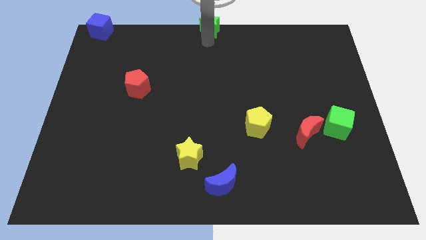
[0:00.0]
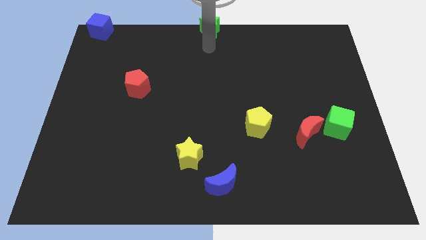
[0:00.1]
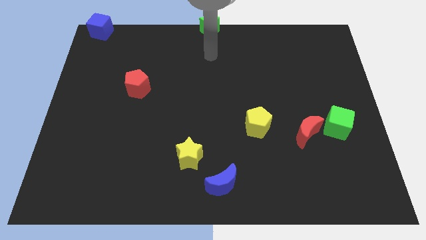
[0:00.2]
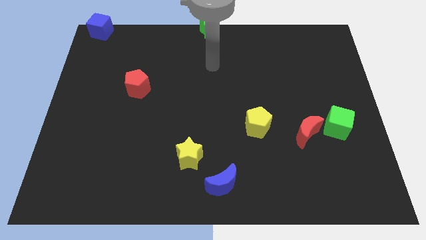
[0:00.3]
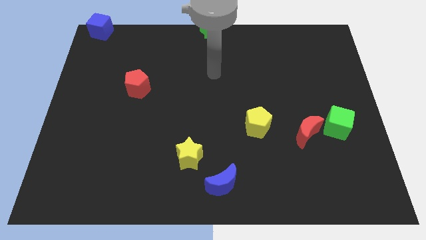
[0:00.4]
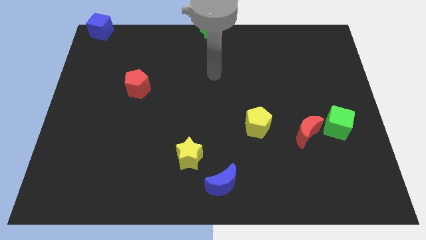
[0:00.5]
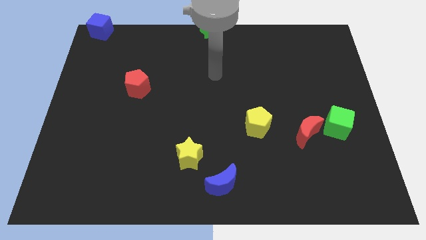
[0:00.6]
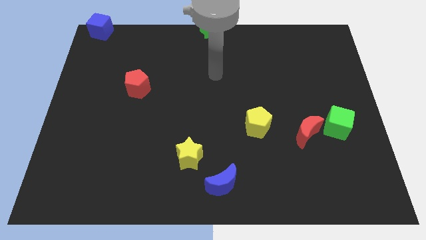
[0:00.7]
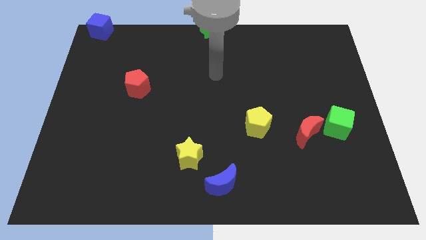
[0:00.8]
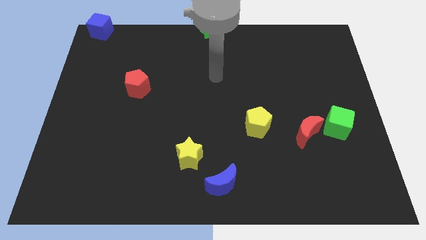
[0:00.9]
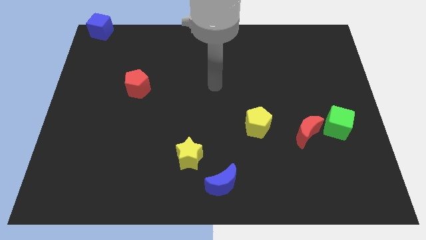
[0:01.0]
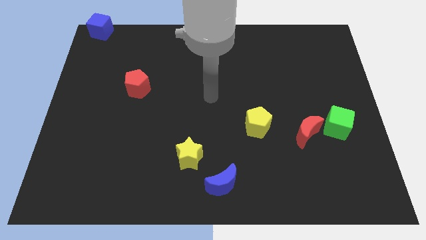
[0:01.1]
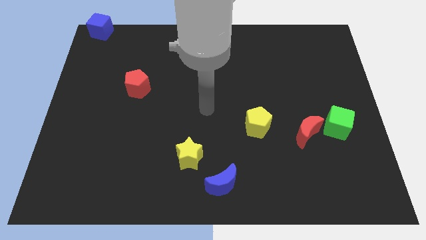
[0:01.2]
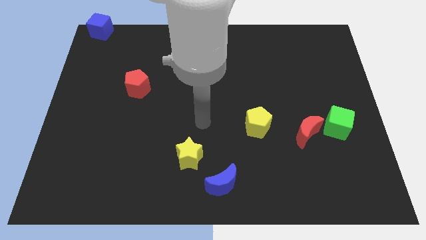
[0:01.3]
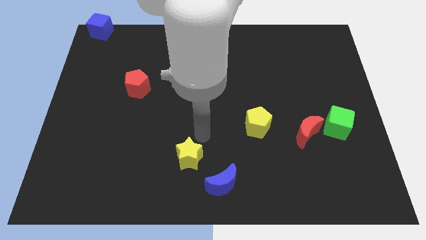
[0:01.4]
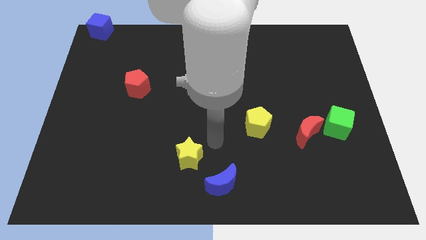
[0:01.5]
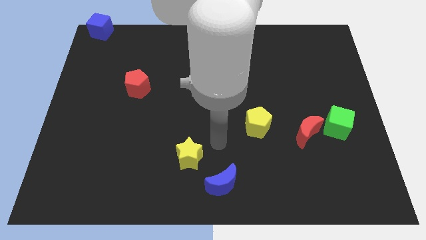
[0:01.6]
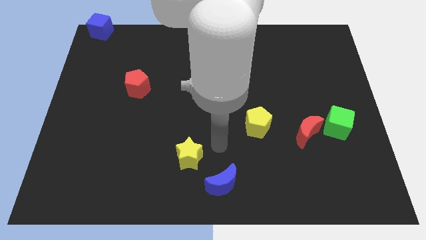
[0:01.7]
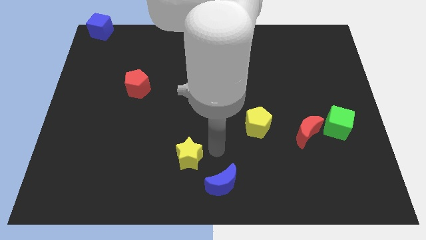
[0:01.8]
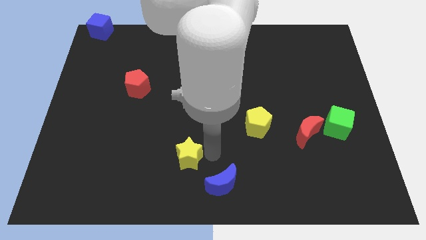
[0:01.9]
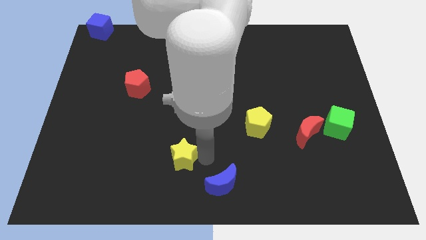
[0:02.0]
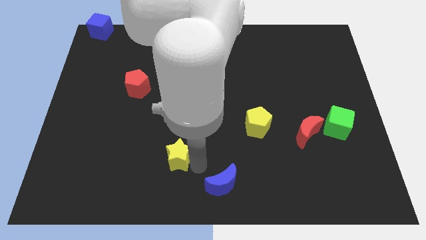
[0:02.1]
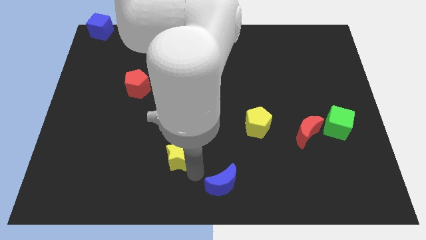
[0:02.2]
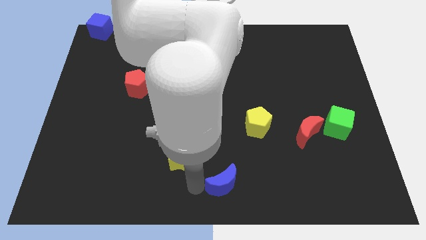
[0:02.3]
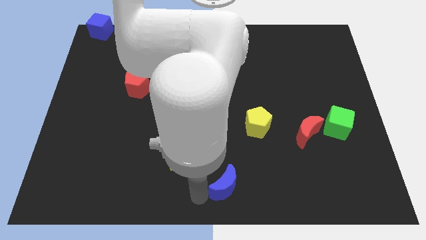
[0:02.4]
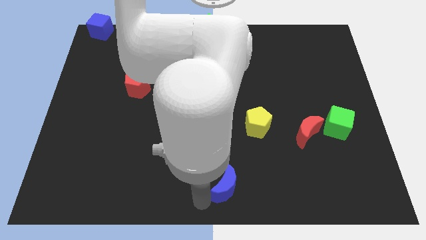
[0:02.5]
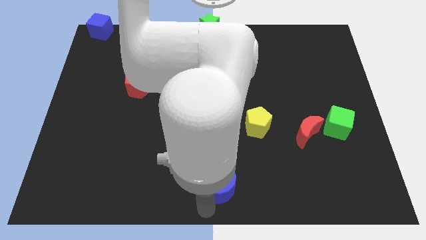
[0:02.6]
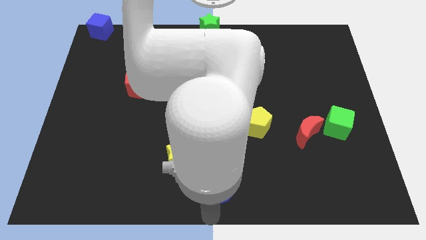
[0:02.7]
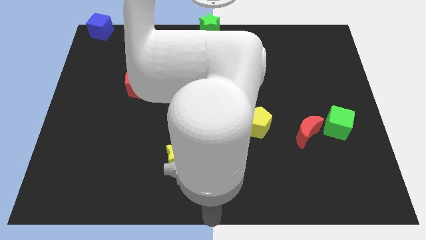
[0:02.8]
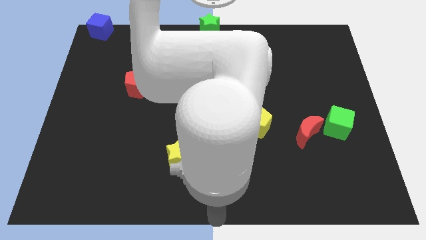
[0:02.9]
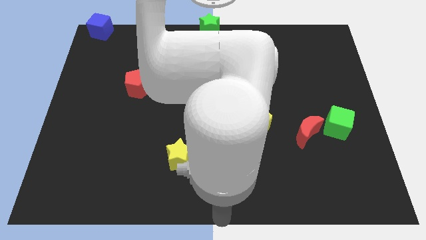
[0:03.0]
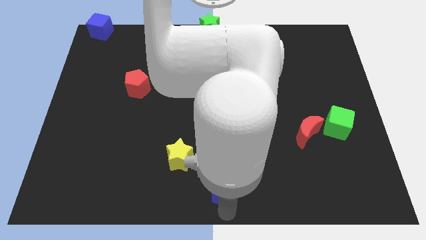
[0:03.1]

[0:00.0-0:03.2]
slightly touch right to the yellow star

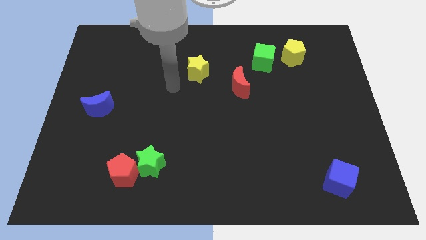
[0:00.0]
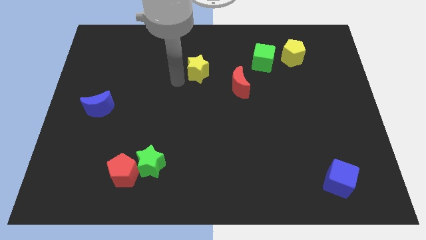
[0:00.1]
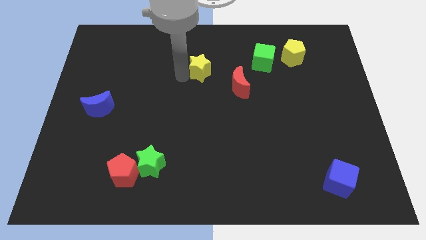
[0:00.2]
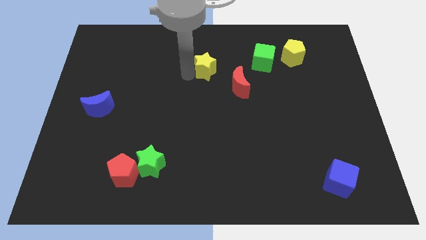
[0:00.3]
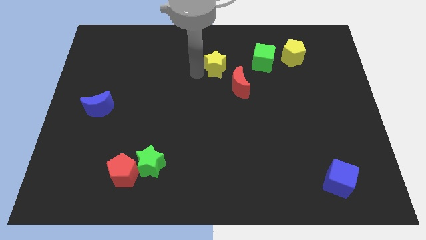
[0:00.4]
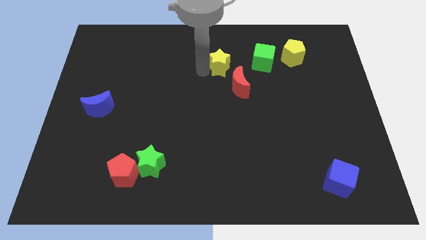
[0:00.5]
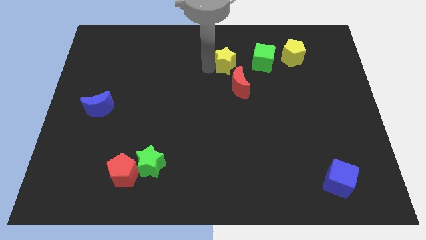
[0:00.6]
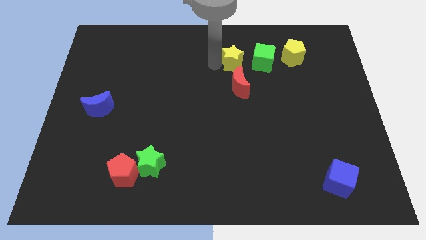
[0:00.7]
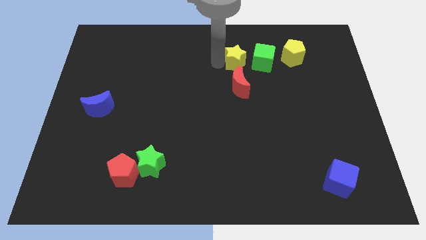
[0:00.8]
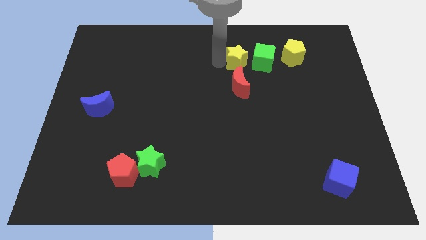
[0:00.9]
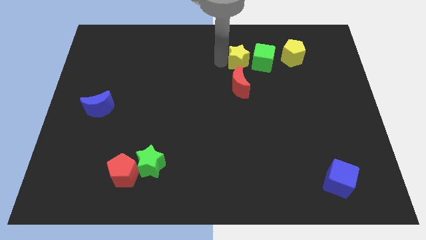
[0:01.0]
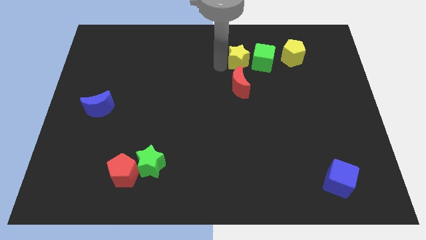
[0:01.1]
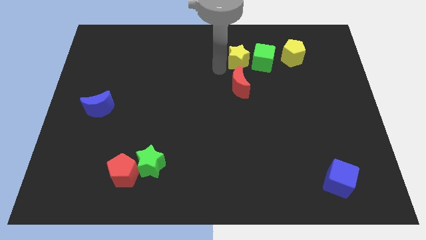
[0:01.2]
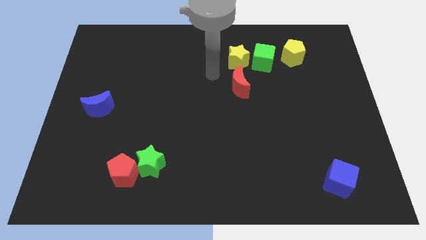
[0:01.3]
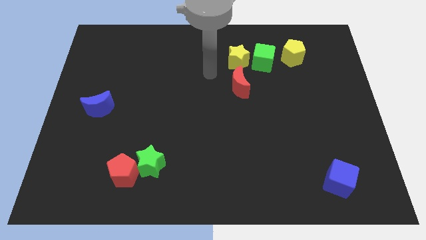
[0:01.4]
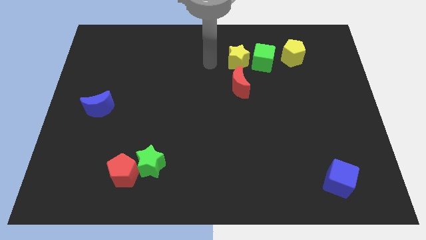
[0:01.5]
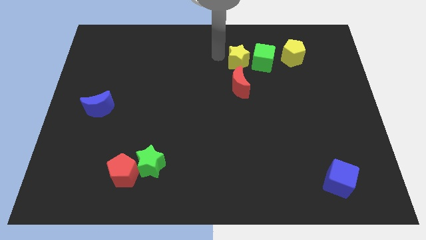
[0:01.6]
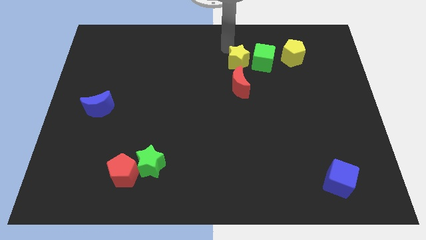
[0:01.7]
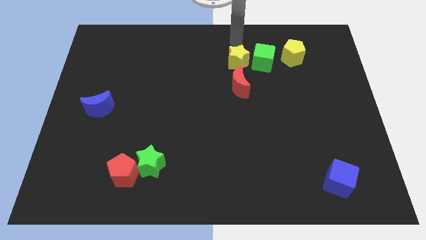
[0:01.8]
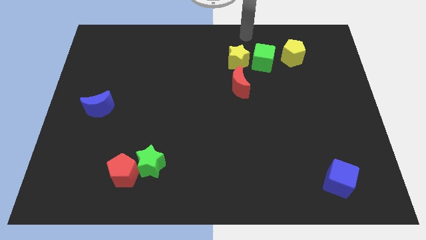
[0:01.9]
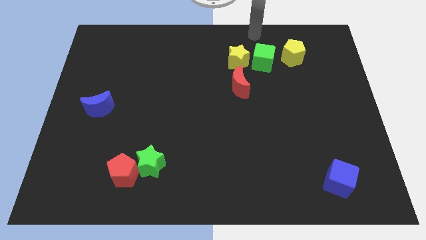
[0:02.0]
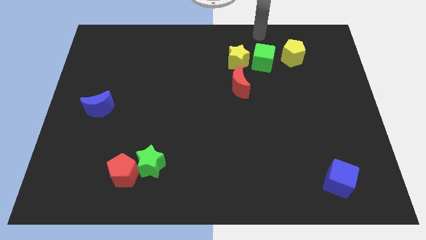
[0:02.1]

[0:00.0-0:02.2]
place the yellow star above the red crescent

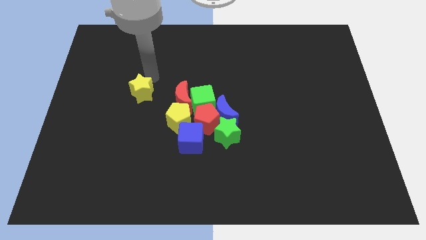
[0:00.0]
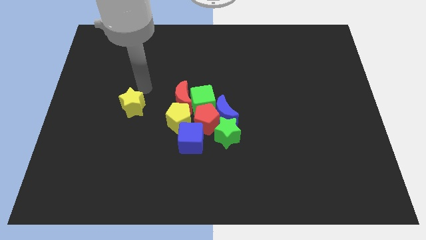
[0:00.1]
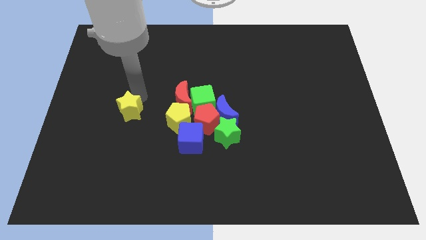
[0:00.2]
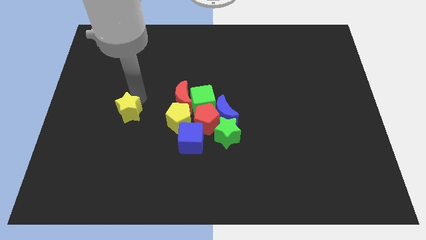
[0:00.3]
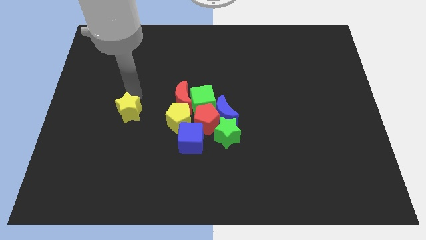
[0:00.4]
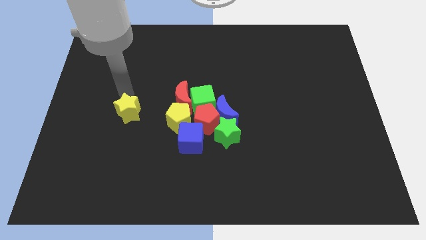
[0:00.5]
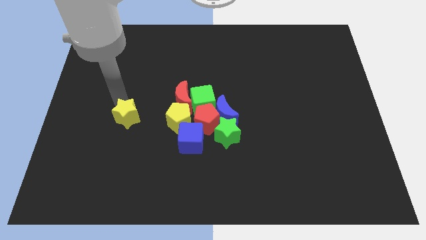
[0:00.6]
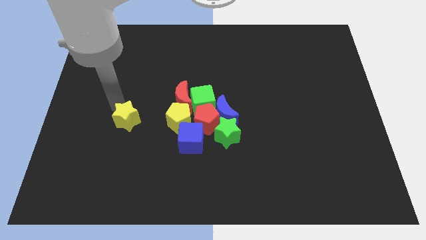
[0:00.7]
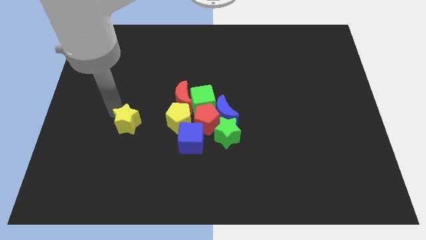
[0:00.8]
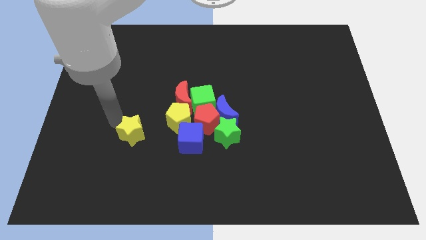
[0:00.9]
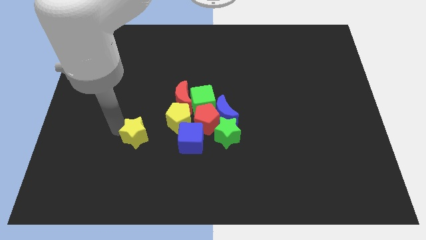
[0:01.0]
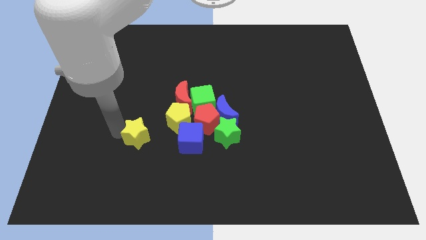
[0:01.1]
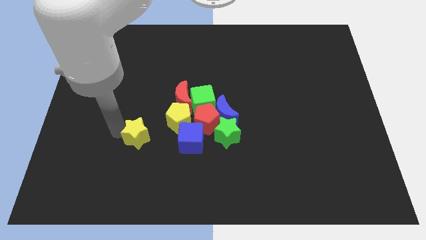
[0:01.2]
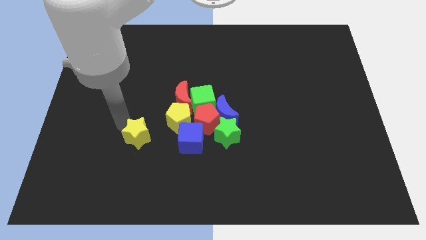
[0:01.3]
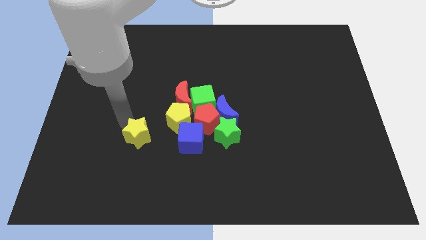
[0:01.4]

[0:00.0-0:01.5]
move the yellow star to the center

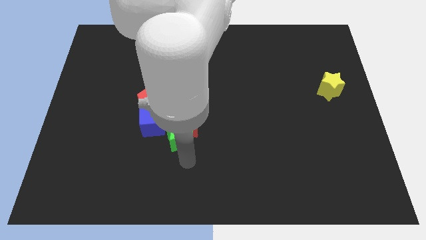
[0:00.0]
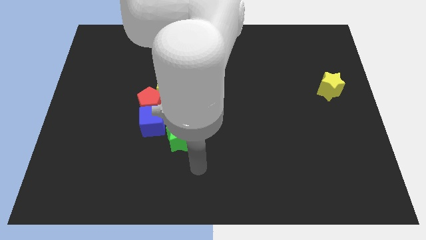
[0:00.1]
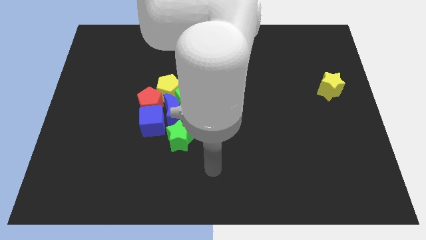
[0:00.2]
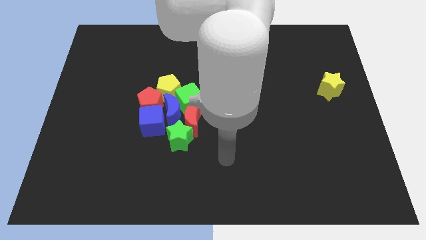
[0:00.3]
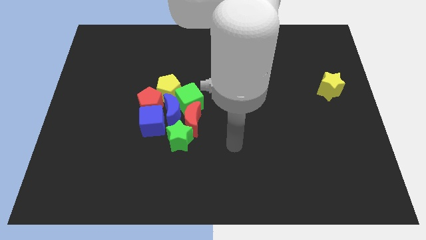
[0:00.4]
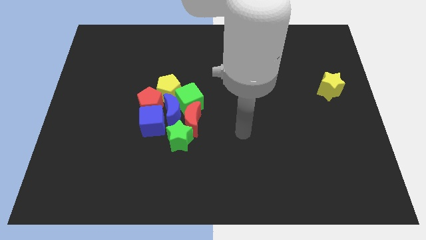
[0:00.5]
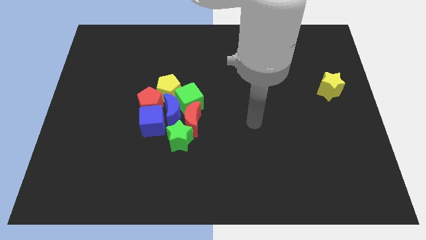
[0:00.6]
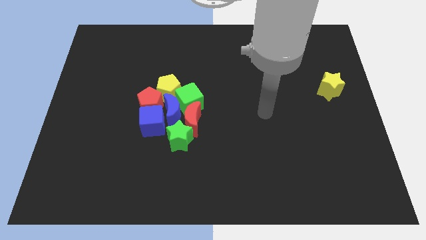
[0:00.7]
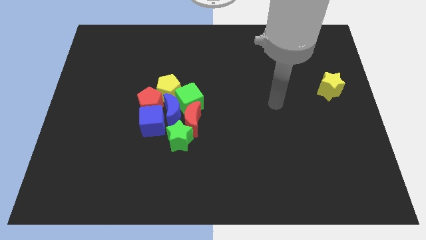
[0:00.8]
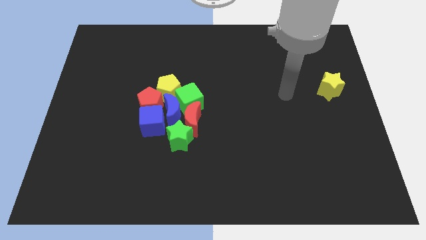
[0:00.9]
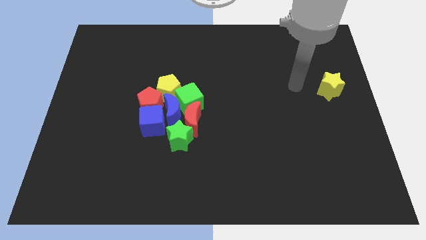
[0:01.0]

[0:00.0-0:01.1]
move your arm towards yellow star

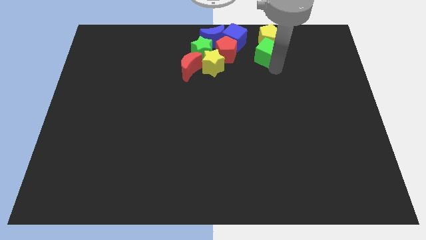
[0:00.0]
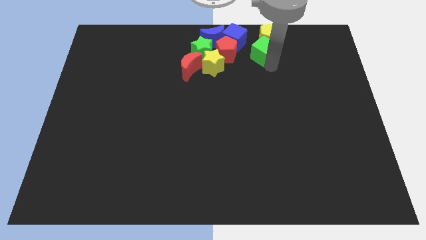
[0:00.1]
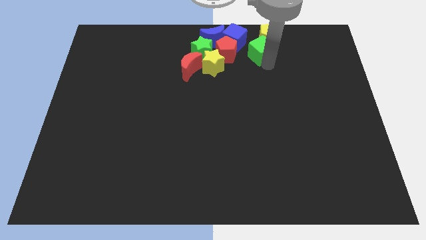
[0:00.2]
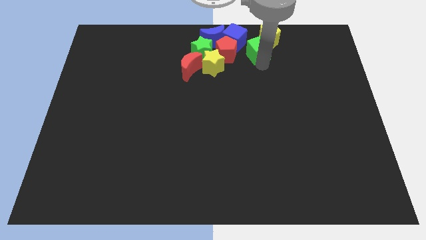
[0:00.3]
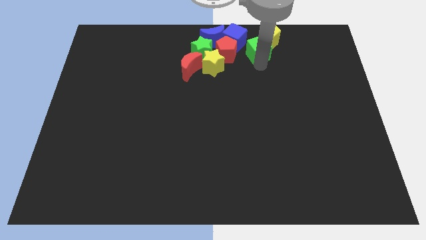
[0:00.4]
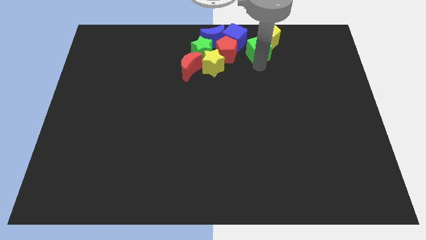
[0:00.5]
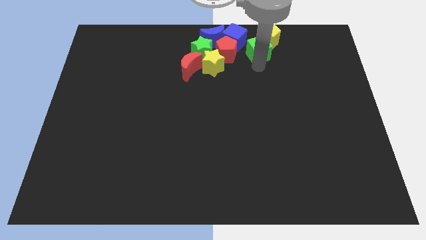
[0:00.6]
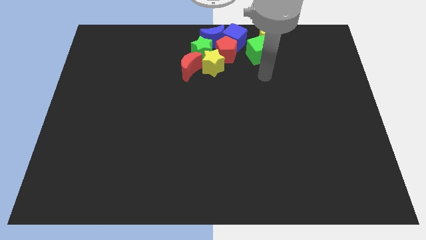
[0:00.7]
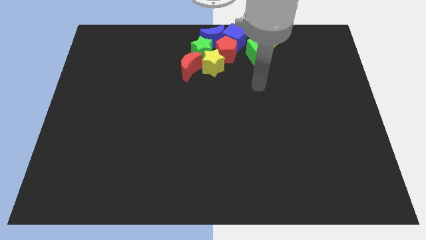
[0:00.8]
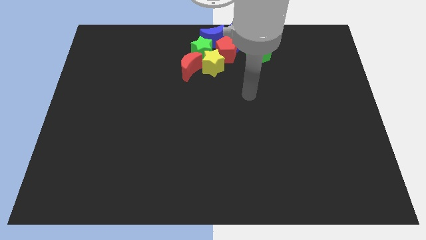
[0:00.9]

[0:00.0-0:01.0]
push the green cube to the right of the red pentagon
